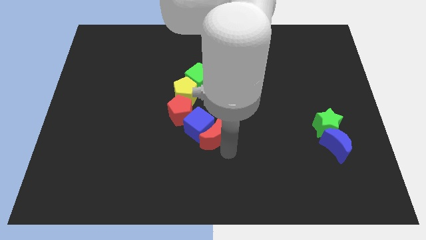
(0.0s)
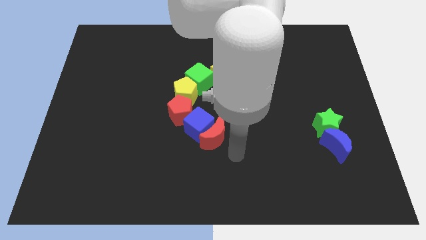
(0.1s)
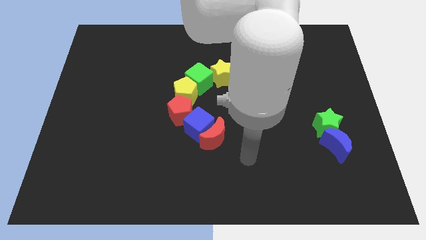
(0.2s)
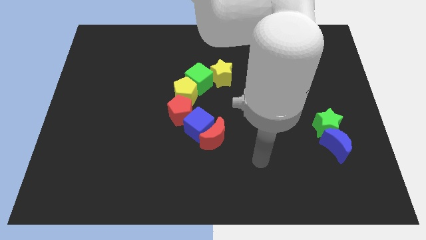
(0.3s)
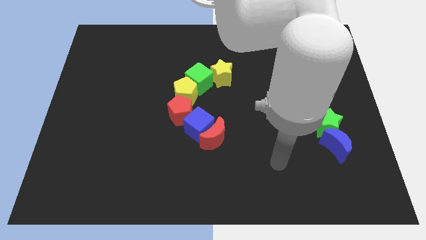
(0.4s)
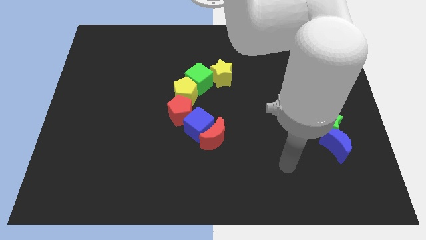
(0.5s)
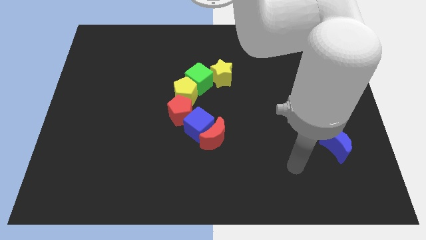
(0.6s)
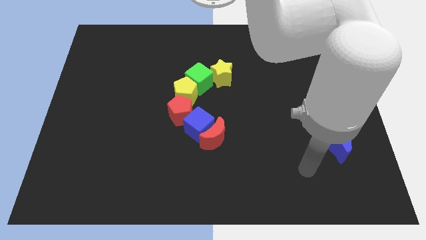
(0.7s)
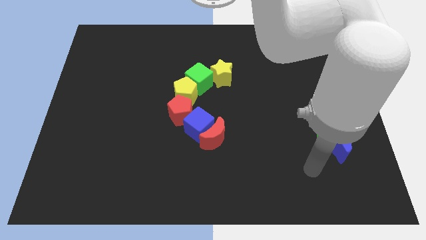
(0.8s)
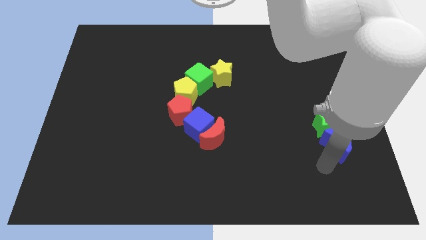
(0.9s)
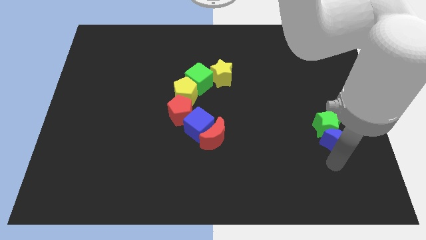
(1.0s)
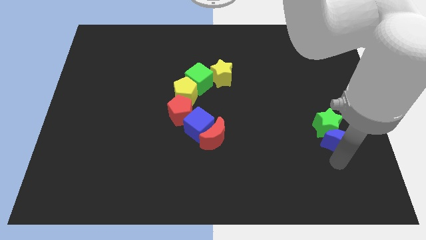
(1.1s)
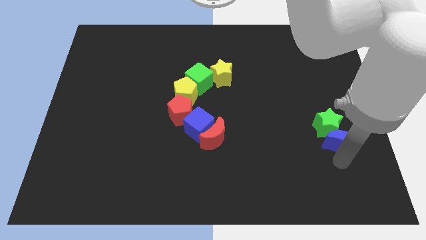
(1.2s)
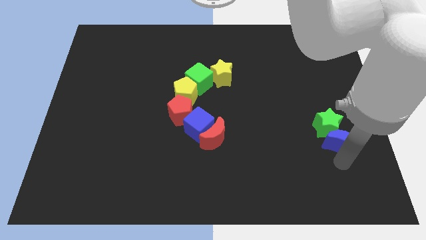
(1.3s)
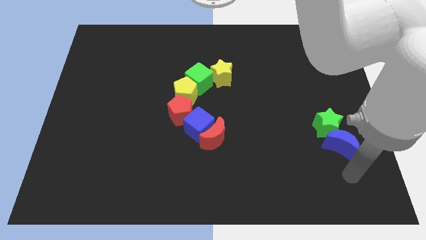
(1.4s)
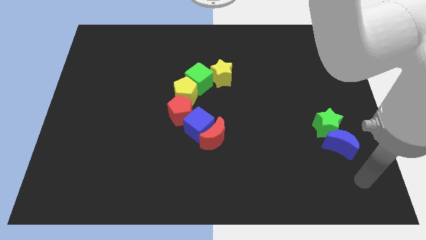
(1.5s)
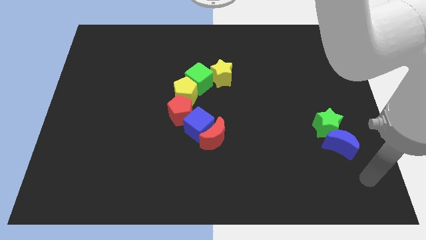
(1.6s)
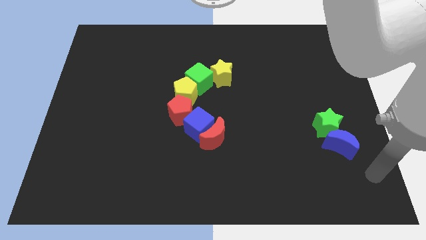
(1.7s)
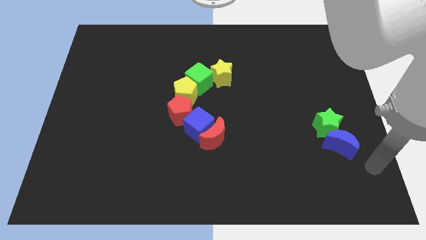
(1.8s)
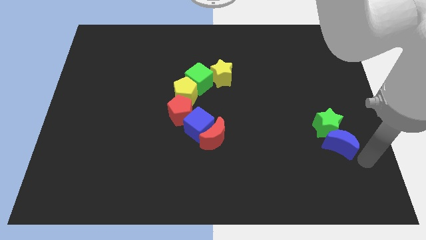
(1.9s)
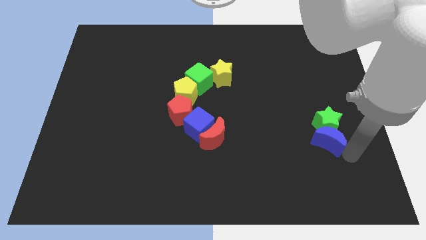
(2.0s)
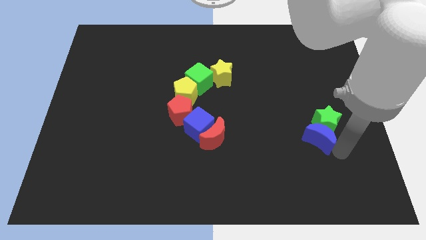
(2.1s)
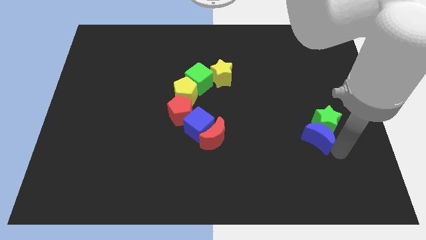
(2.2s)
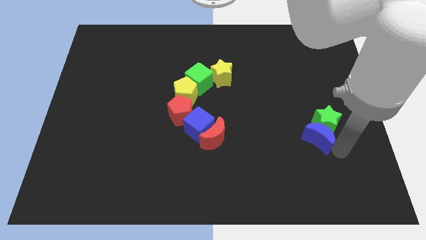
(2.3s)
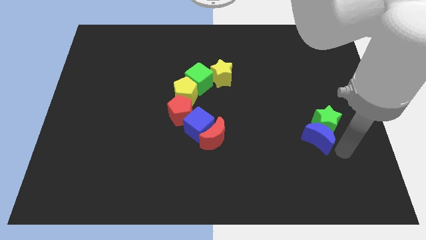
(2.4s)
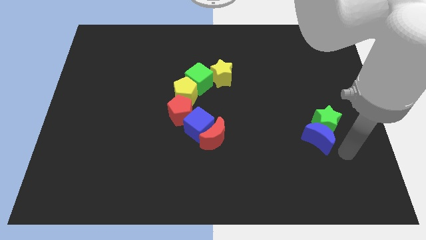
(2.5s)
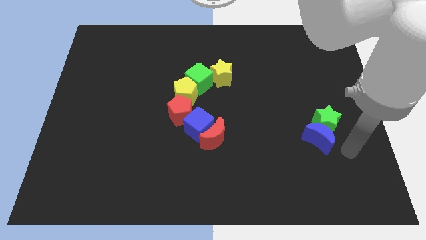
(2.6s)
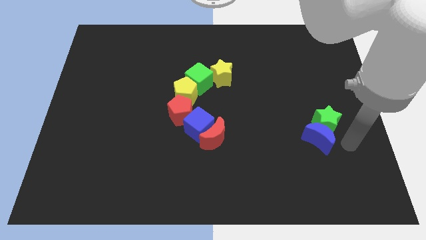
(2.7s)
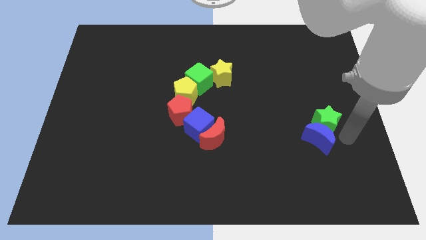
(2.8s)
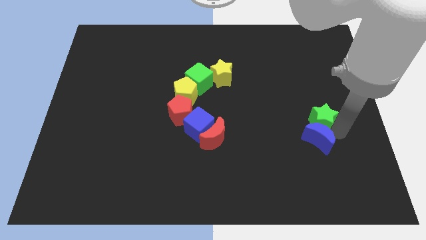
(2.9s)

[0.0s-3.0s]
move your arm into the blue crescent

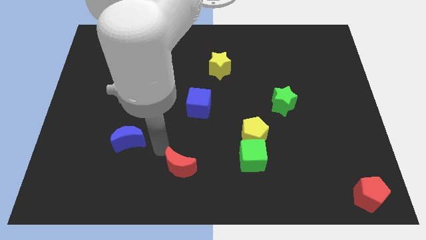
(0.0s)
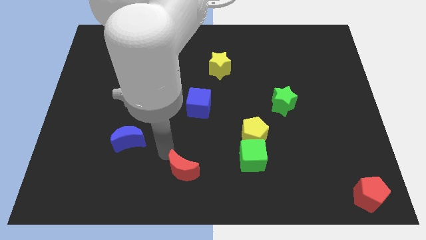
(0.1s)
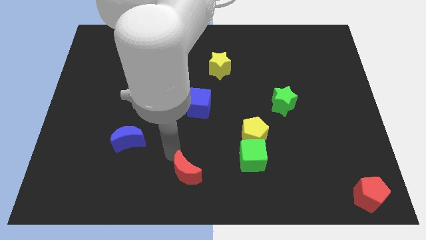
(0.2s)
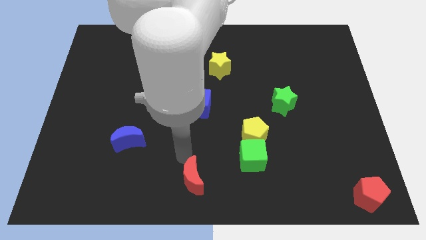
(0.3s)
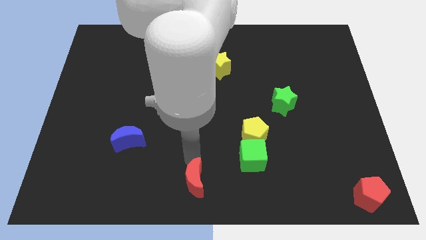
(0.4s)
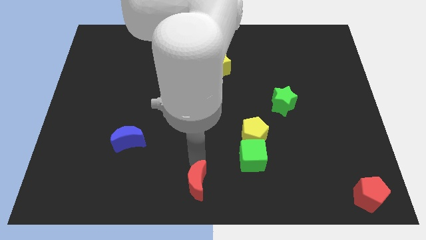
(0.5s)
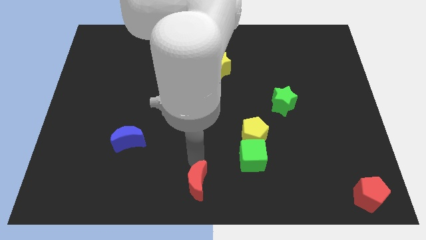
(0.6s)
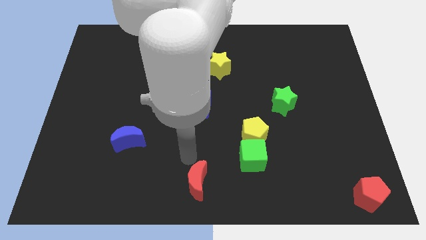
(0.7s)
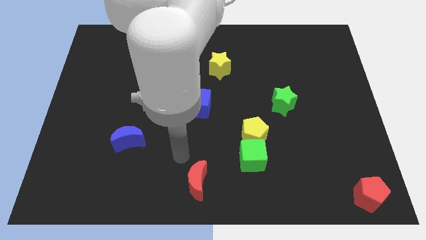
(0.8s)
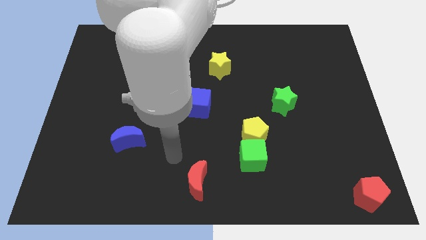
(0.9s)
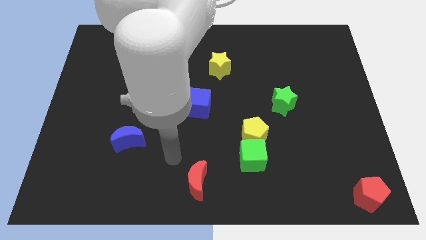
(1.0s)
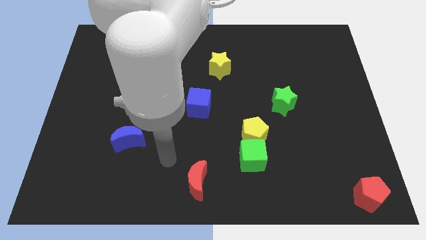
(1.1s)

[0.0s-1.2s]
slide red moon towards bottom center

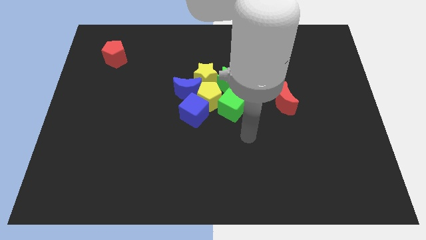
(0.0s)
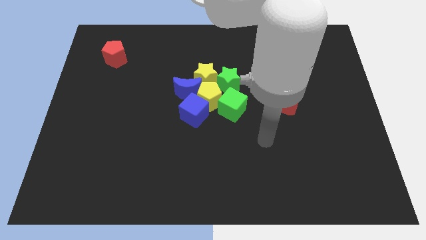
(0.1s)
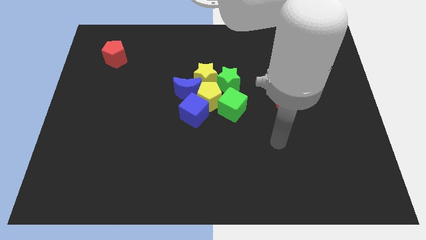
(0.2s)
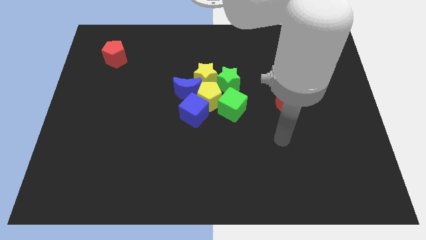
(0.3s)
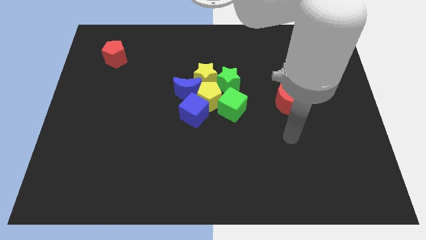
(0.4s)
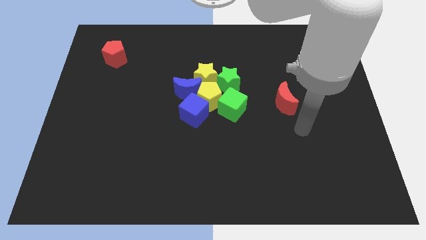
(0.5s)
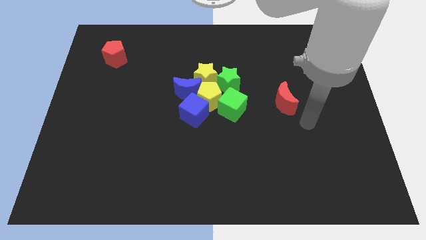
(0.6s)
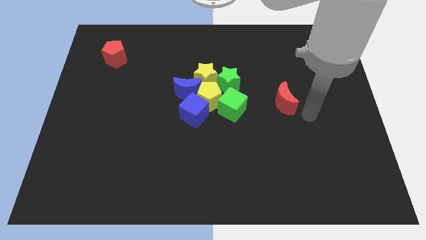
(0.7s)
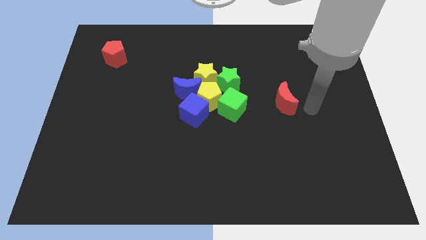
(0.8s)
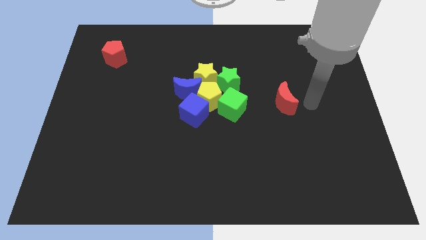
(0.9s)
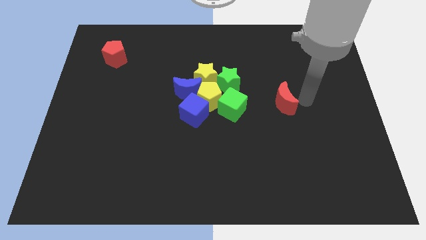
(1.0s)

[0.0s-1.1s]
place your hand to the right of the red moon

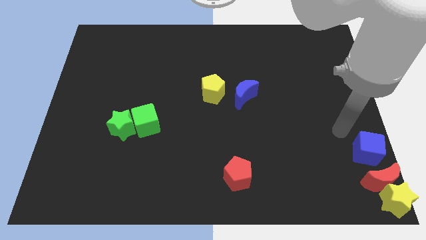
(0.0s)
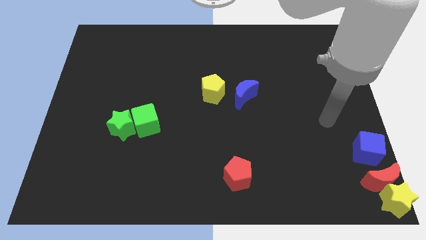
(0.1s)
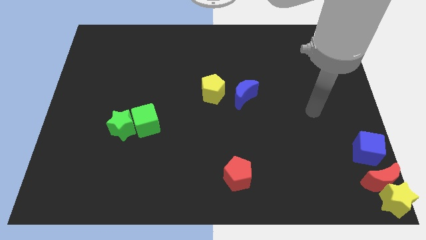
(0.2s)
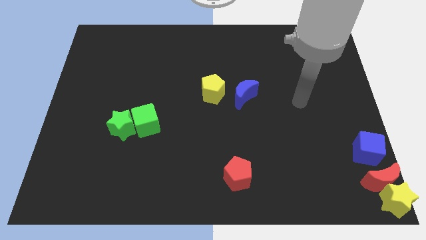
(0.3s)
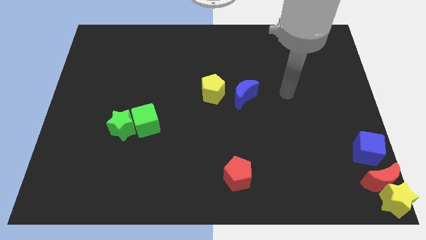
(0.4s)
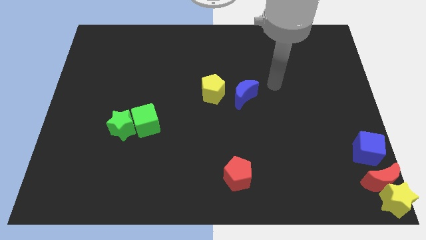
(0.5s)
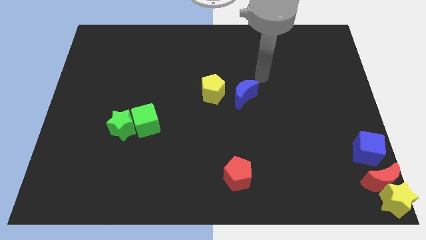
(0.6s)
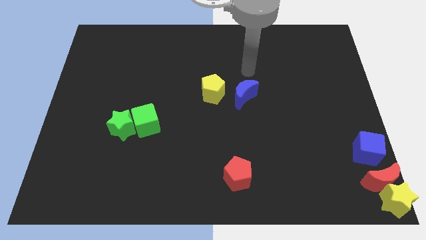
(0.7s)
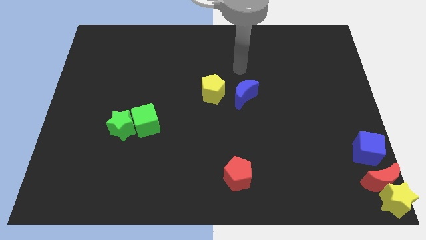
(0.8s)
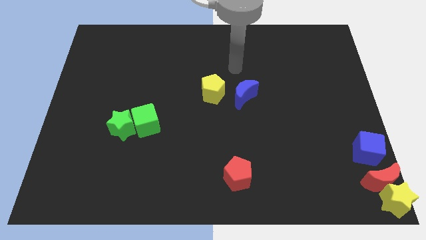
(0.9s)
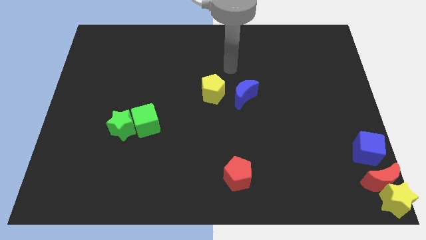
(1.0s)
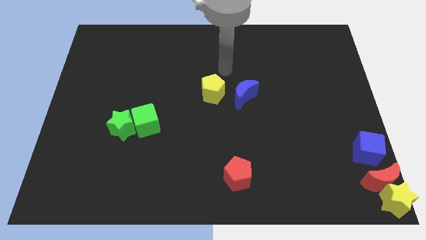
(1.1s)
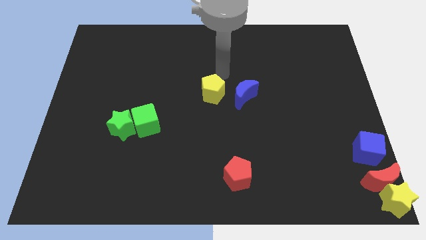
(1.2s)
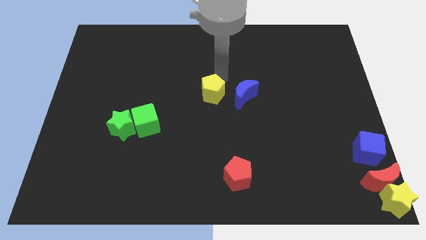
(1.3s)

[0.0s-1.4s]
point your arm at the top right side of the yellow pentagon

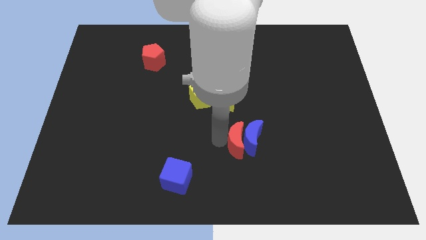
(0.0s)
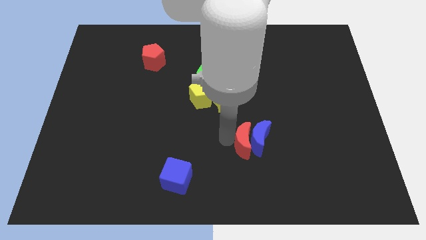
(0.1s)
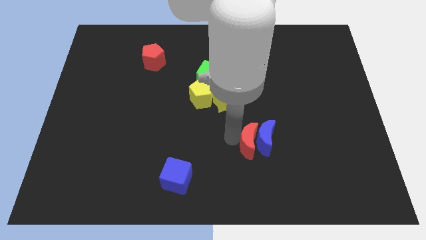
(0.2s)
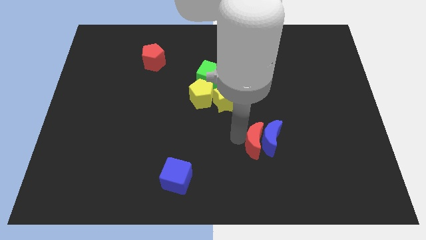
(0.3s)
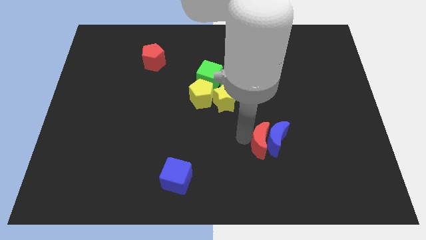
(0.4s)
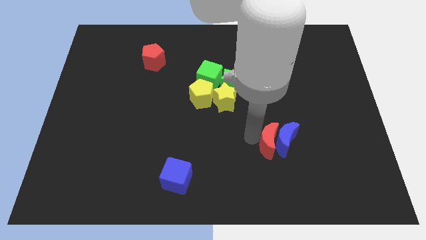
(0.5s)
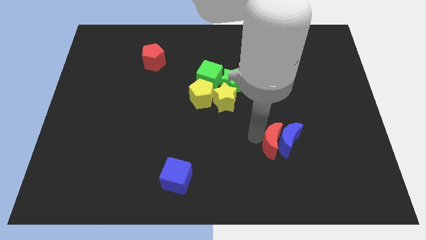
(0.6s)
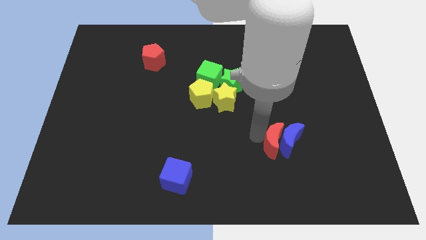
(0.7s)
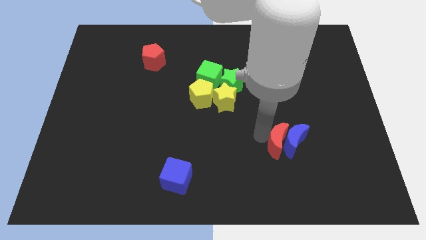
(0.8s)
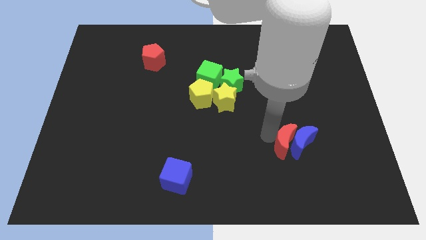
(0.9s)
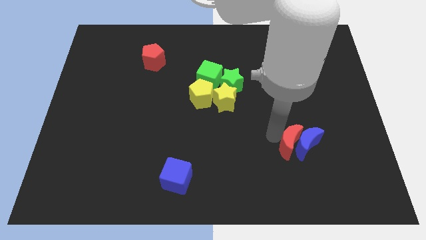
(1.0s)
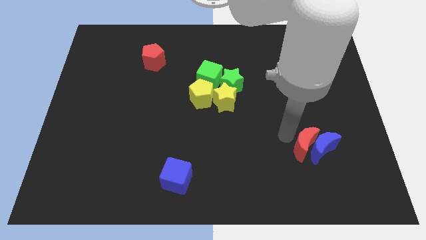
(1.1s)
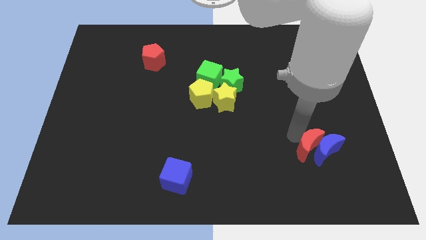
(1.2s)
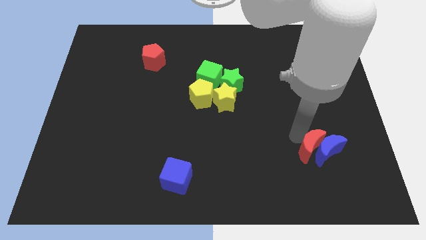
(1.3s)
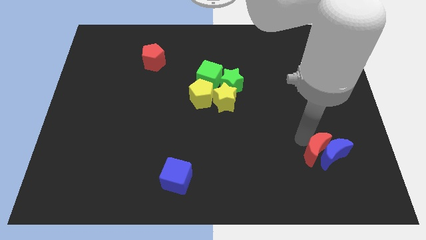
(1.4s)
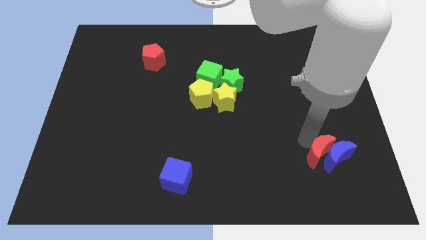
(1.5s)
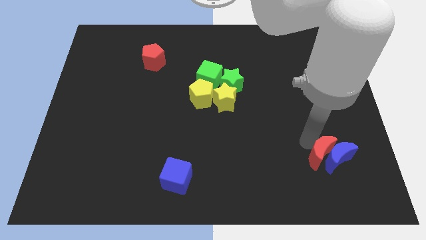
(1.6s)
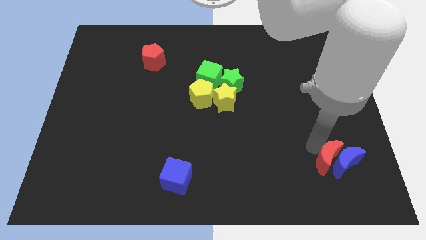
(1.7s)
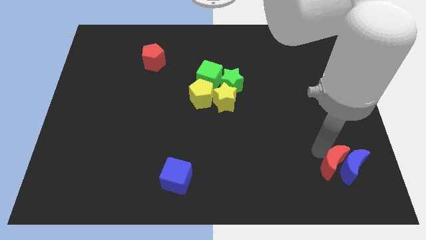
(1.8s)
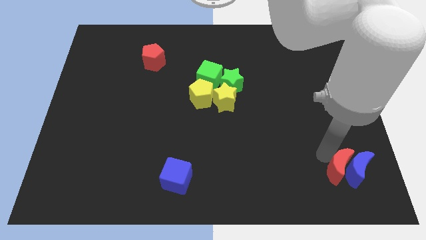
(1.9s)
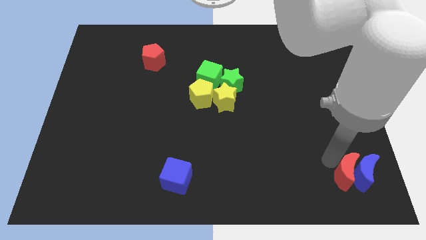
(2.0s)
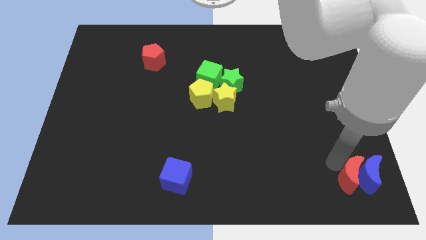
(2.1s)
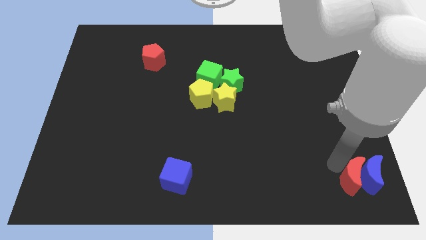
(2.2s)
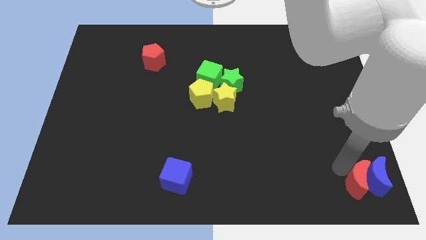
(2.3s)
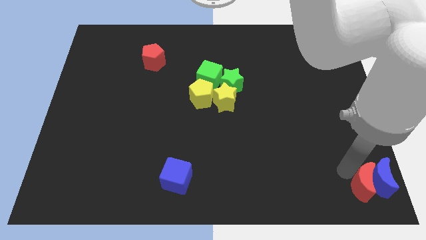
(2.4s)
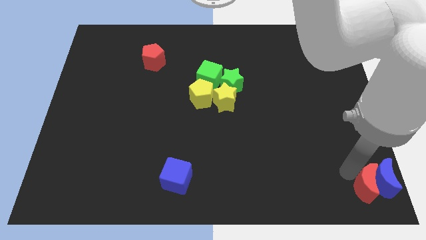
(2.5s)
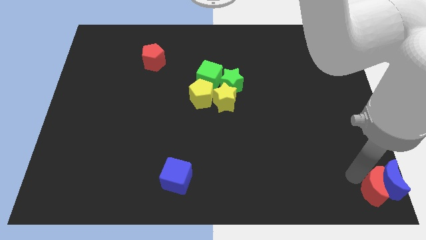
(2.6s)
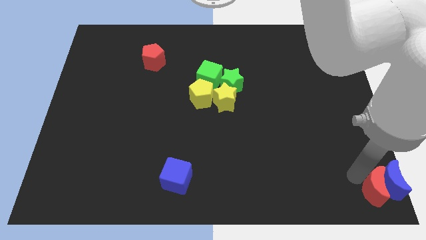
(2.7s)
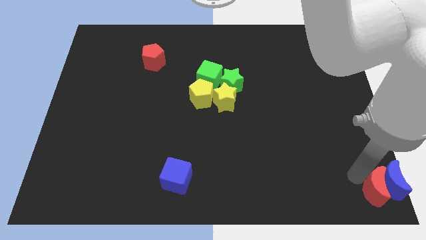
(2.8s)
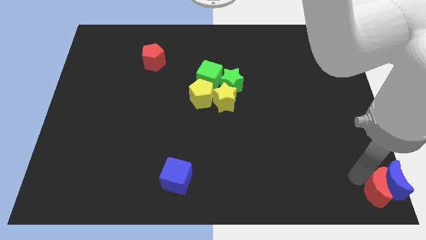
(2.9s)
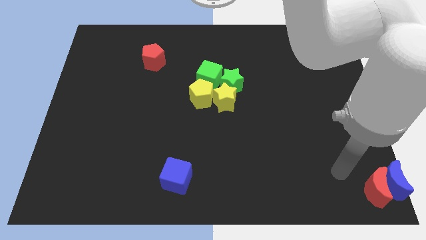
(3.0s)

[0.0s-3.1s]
slide the red moon and blue moon to the bottom right side of the board
